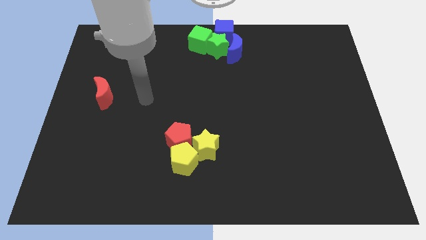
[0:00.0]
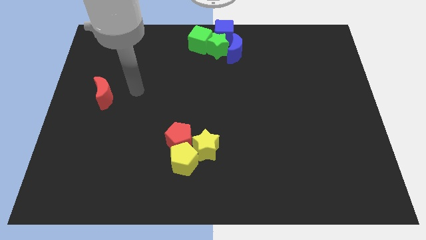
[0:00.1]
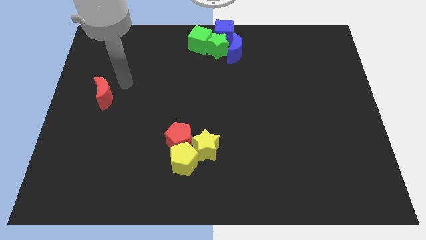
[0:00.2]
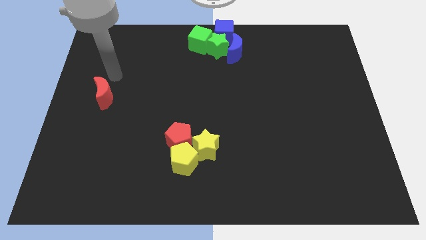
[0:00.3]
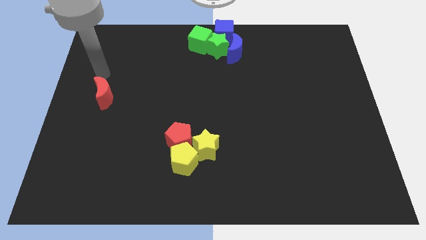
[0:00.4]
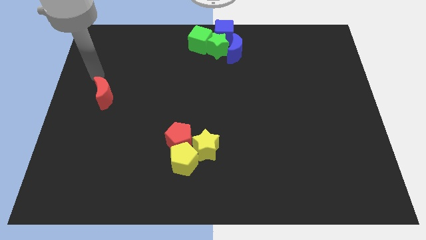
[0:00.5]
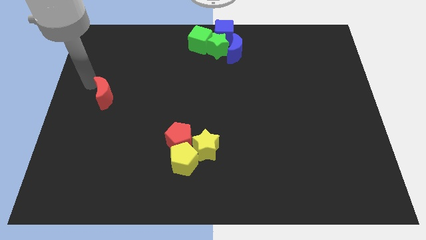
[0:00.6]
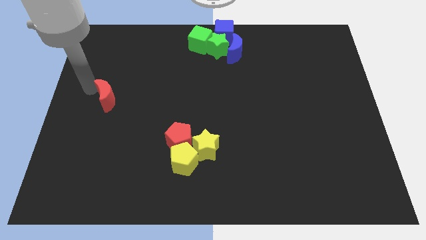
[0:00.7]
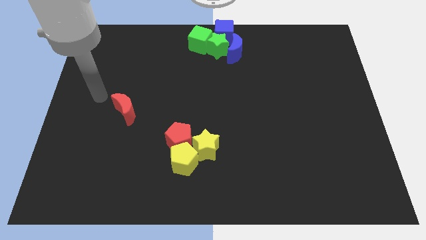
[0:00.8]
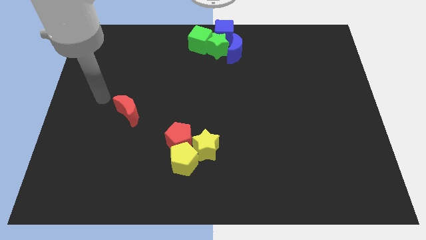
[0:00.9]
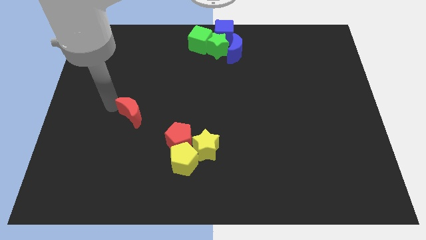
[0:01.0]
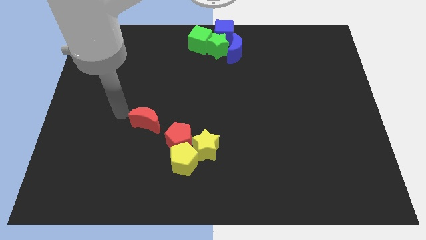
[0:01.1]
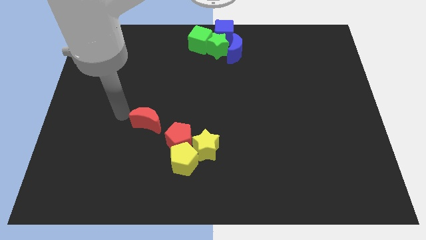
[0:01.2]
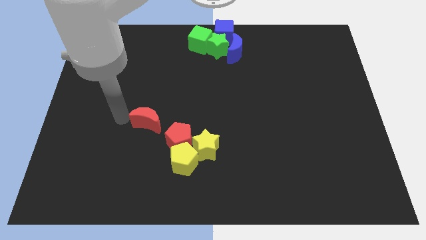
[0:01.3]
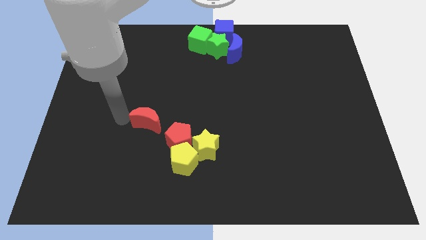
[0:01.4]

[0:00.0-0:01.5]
push the red crescent towards the red pentagon

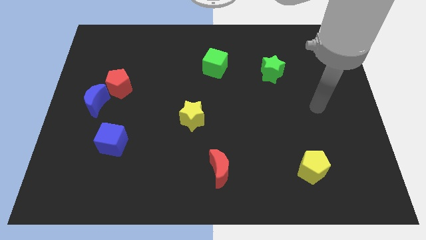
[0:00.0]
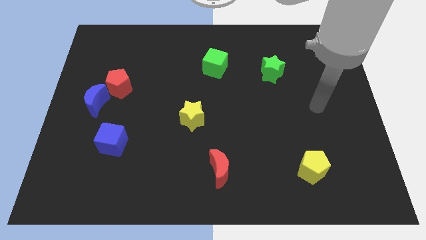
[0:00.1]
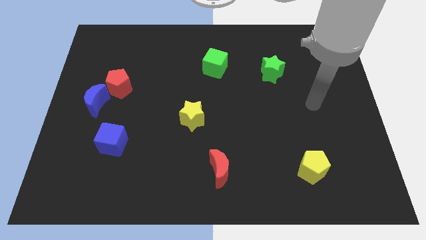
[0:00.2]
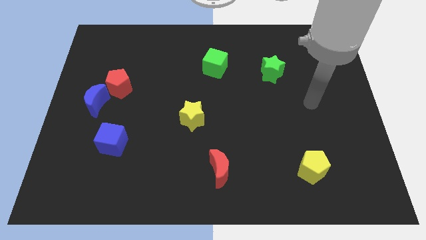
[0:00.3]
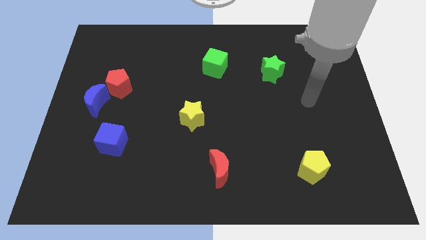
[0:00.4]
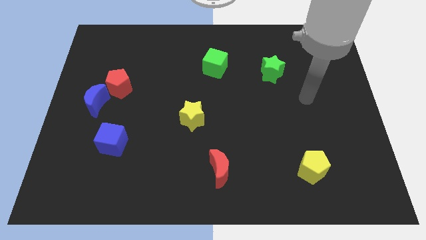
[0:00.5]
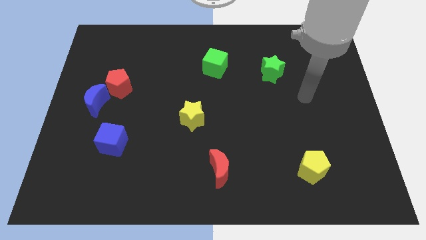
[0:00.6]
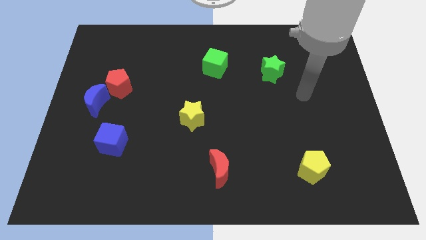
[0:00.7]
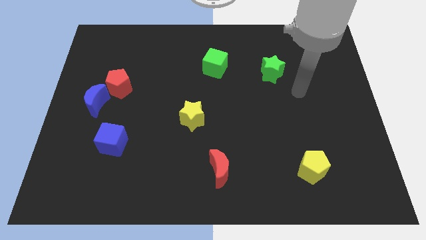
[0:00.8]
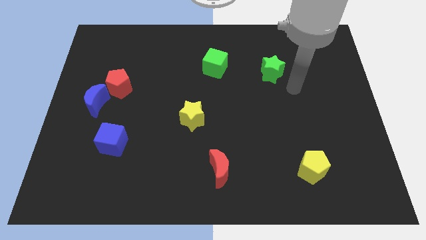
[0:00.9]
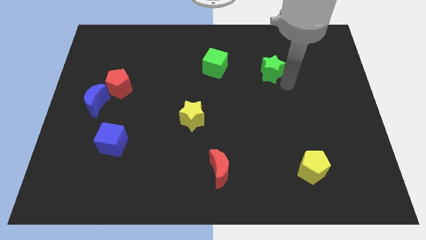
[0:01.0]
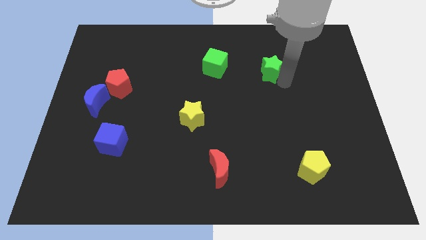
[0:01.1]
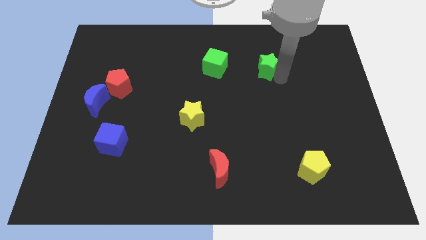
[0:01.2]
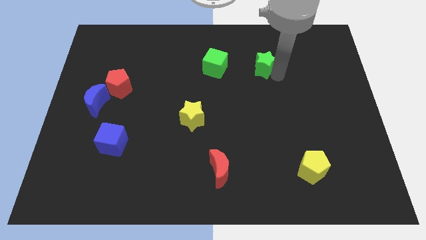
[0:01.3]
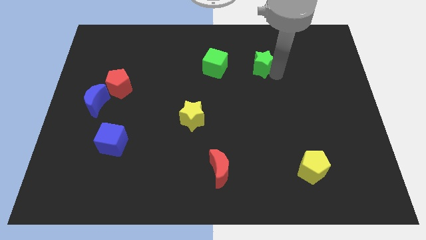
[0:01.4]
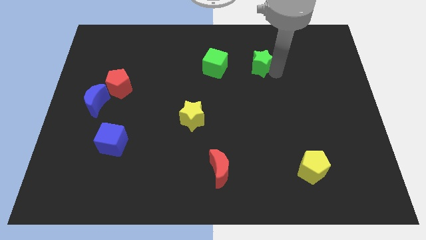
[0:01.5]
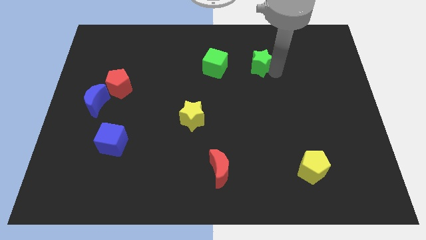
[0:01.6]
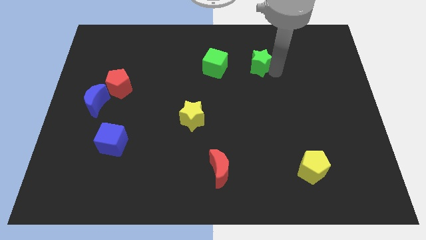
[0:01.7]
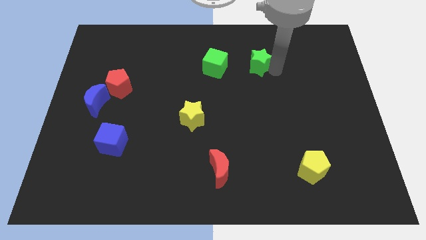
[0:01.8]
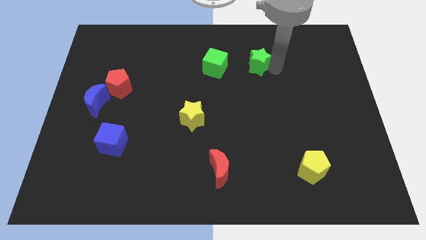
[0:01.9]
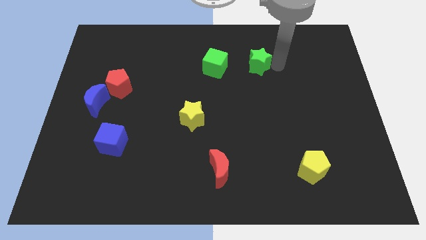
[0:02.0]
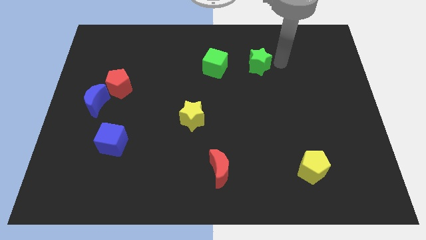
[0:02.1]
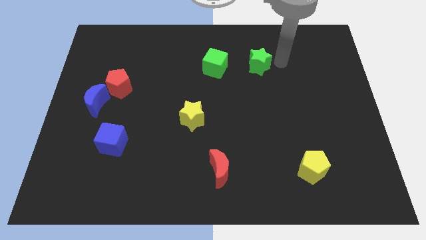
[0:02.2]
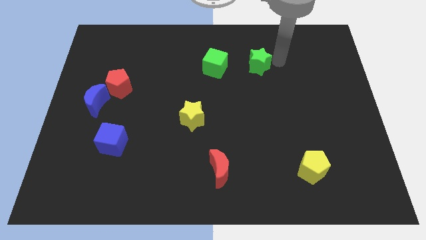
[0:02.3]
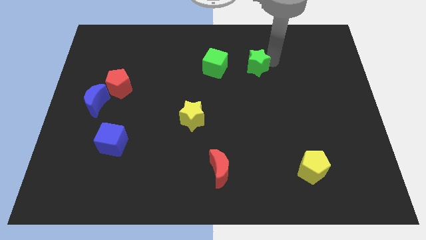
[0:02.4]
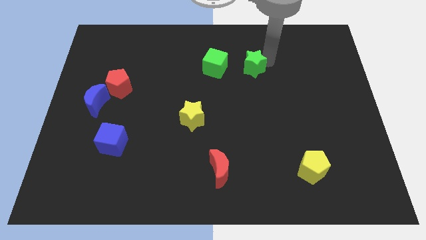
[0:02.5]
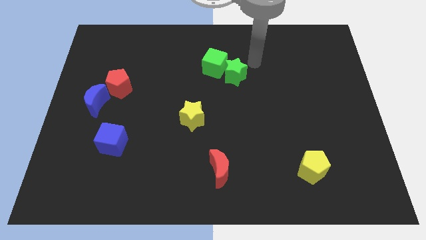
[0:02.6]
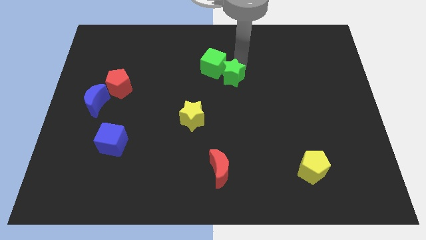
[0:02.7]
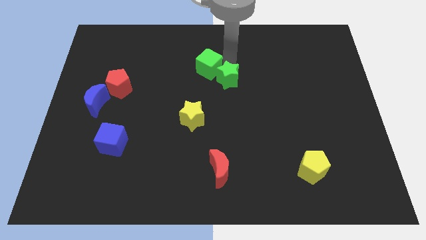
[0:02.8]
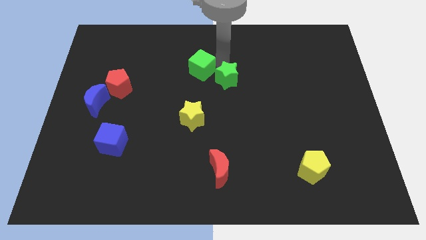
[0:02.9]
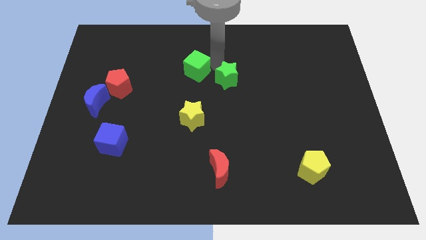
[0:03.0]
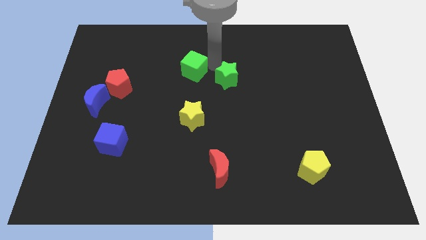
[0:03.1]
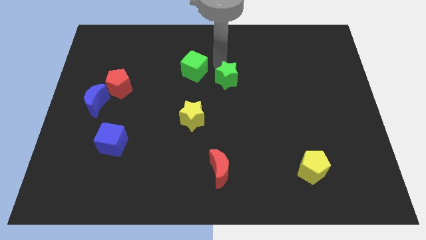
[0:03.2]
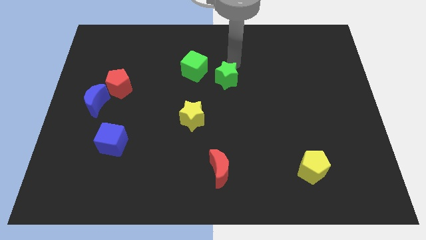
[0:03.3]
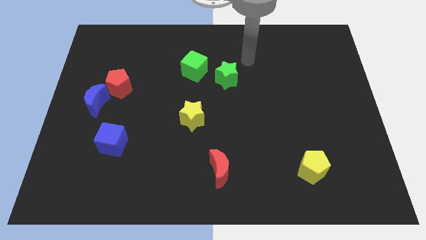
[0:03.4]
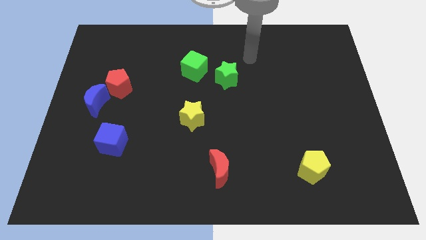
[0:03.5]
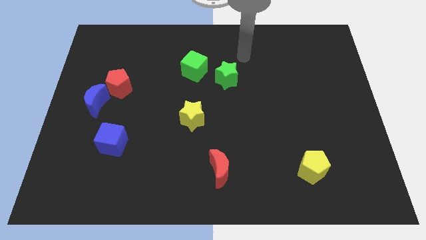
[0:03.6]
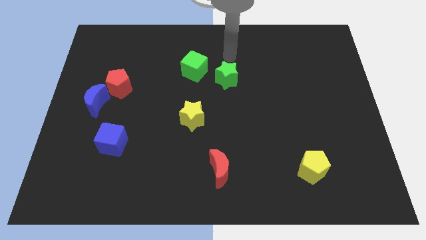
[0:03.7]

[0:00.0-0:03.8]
move the green cube to the left of the green star

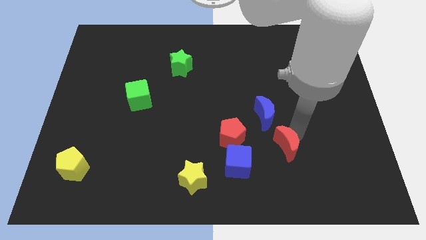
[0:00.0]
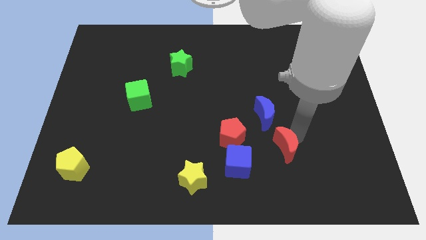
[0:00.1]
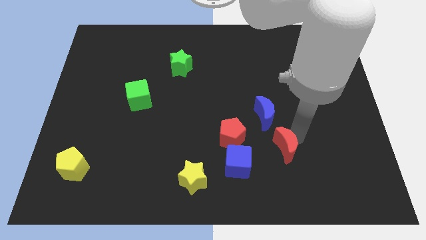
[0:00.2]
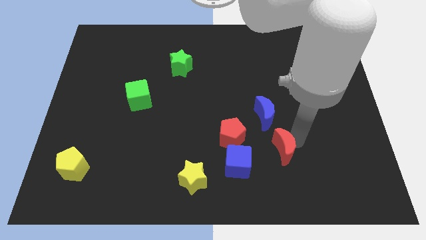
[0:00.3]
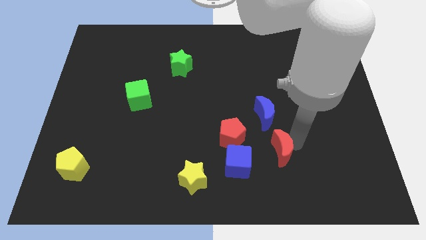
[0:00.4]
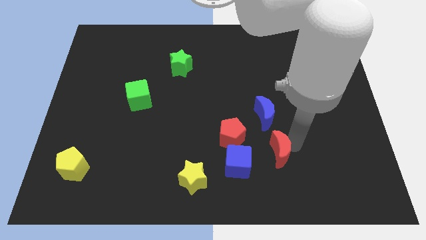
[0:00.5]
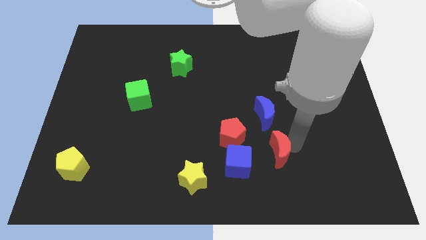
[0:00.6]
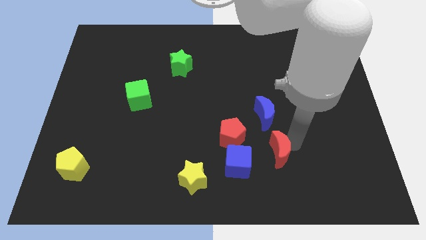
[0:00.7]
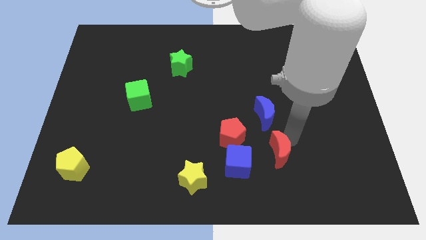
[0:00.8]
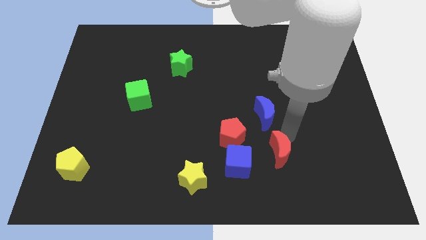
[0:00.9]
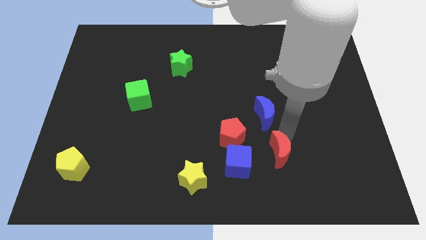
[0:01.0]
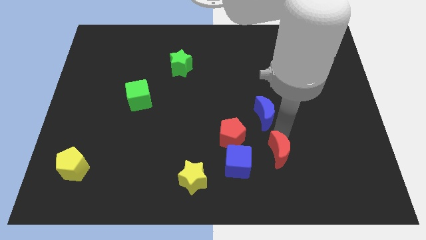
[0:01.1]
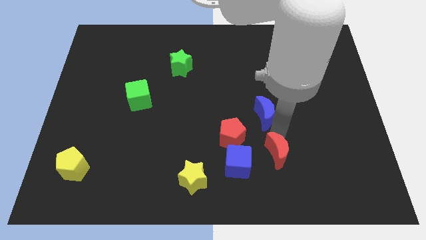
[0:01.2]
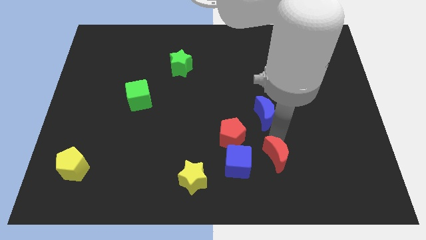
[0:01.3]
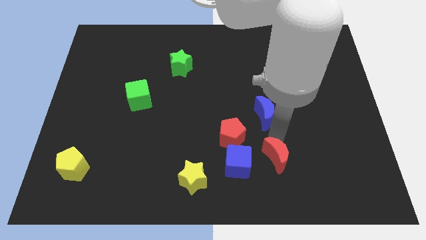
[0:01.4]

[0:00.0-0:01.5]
push red crescent below blue moon

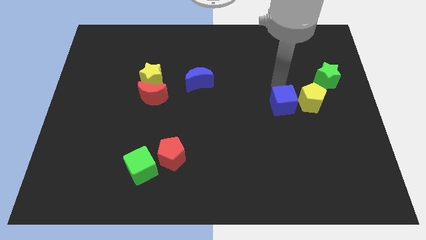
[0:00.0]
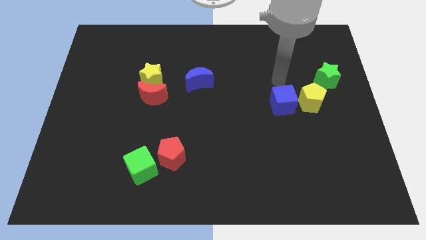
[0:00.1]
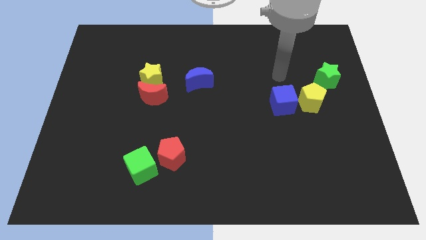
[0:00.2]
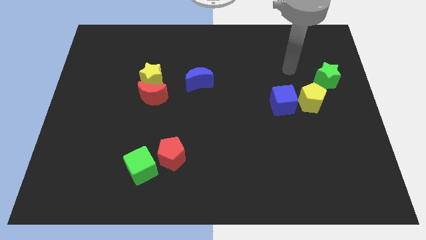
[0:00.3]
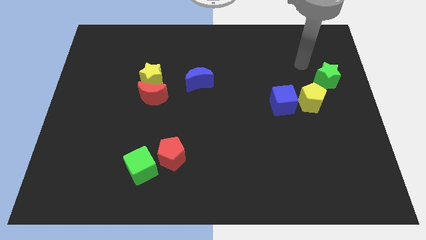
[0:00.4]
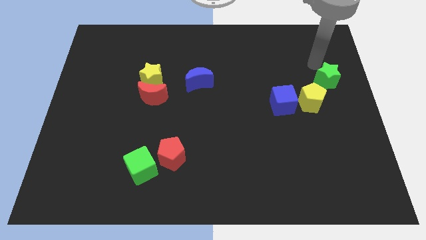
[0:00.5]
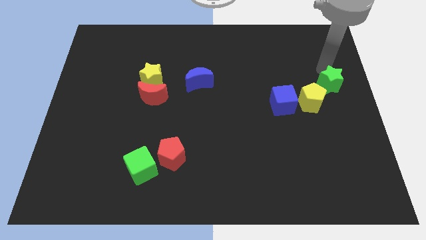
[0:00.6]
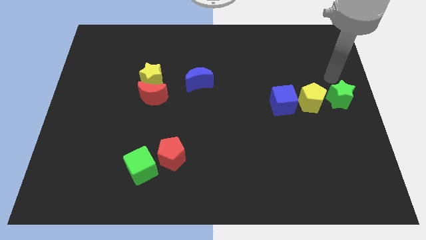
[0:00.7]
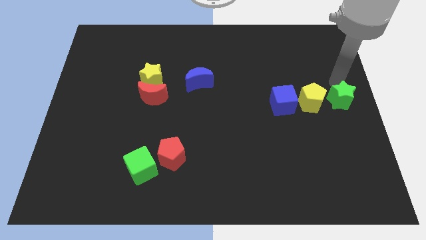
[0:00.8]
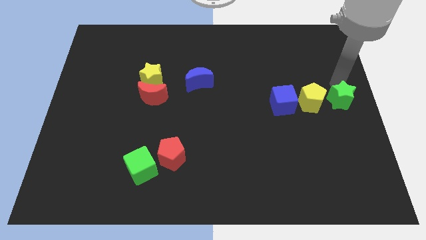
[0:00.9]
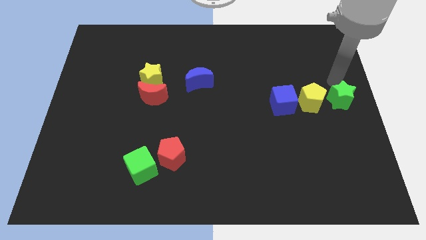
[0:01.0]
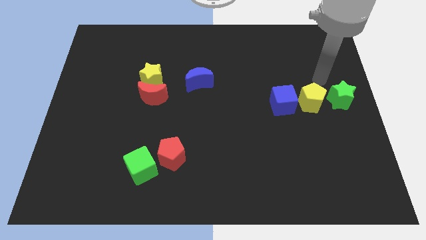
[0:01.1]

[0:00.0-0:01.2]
place the green star at the right side of the yellow pentagon

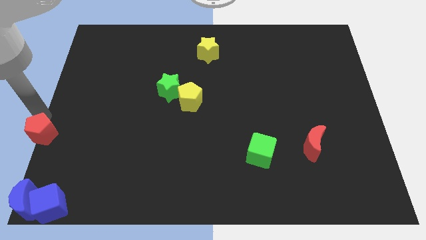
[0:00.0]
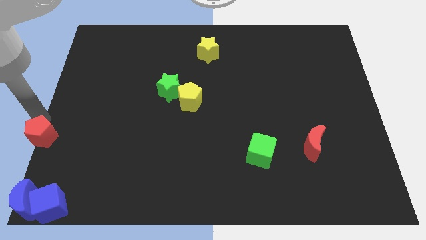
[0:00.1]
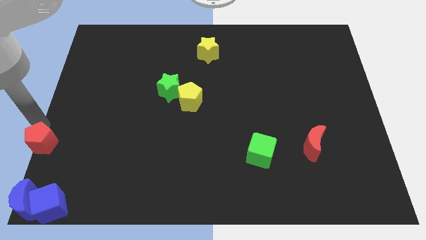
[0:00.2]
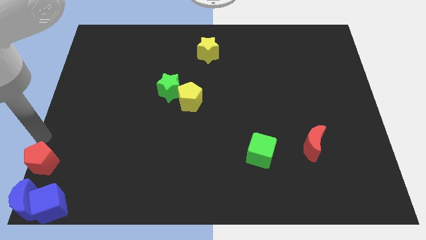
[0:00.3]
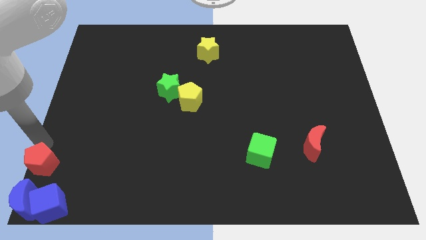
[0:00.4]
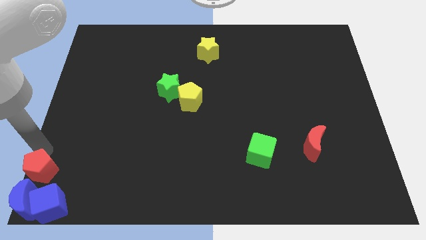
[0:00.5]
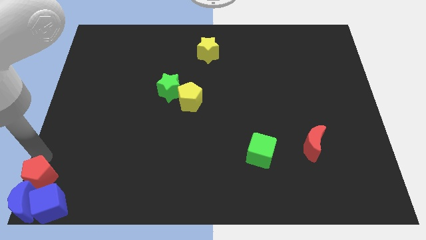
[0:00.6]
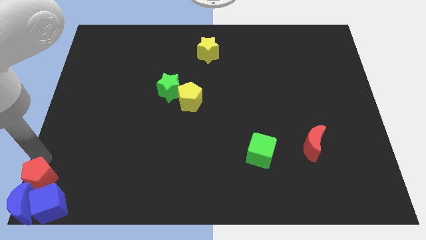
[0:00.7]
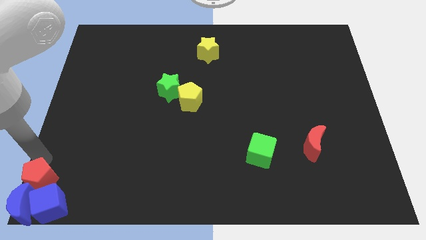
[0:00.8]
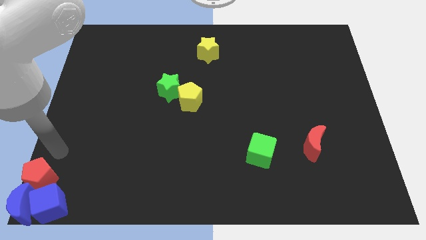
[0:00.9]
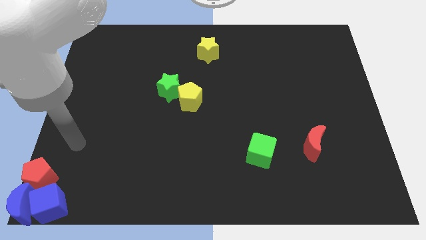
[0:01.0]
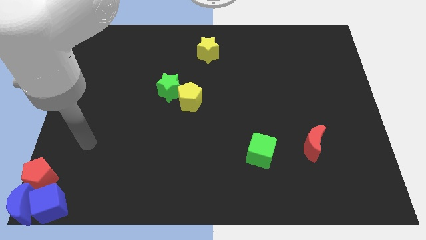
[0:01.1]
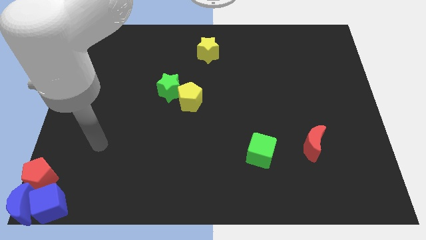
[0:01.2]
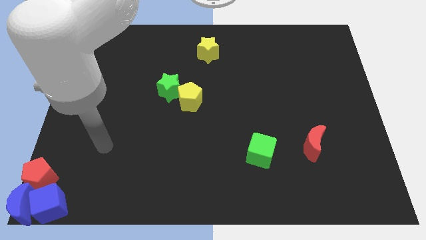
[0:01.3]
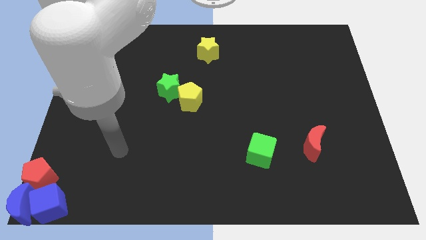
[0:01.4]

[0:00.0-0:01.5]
place the red pentagon on top of the blue crescent
